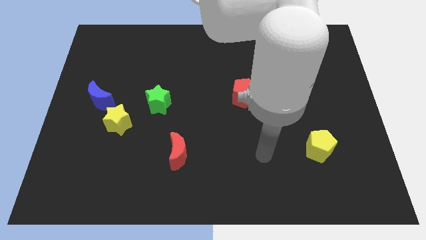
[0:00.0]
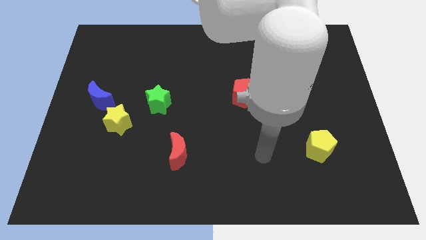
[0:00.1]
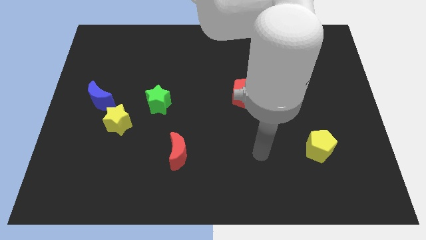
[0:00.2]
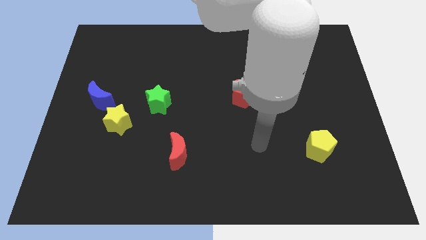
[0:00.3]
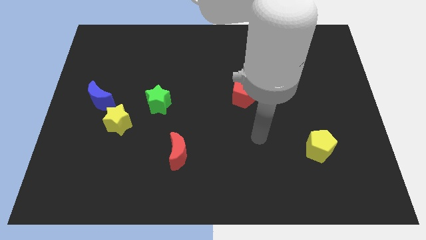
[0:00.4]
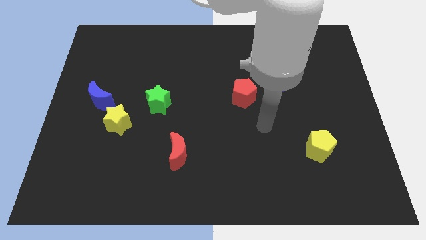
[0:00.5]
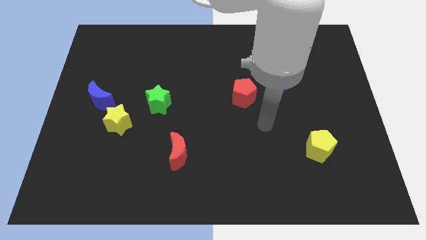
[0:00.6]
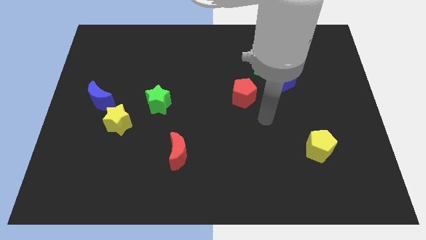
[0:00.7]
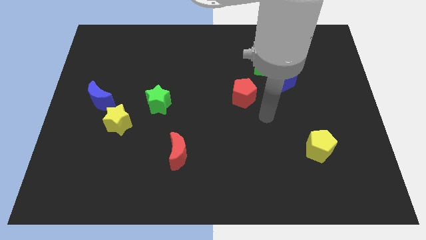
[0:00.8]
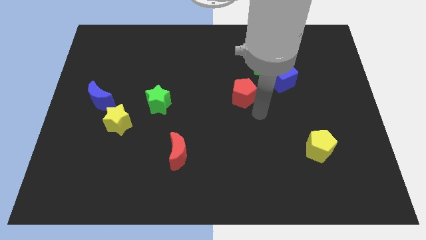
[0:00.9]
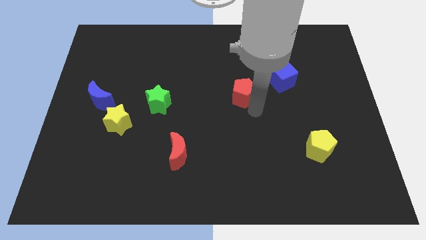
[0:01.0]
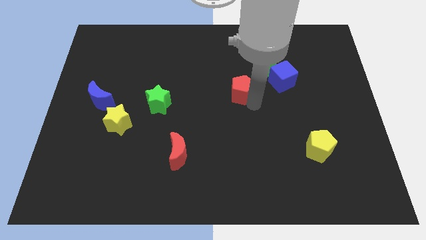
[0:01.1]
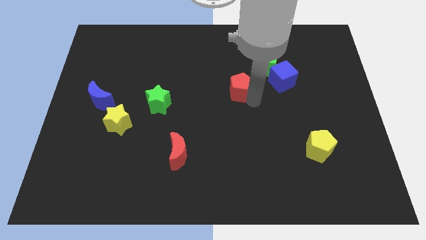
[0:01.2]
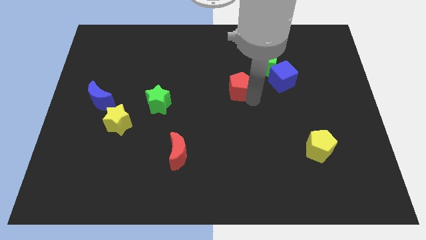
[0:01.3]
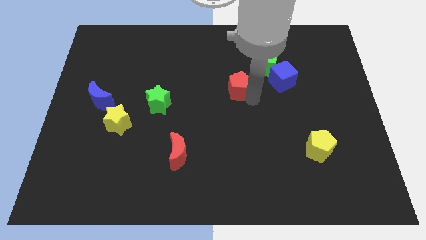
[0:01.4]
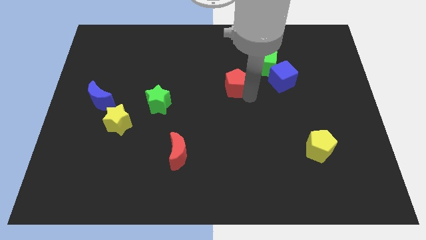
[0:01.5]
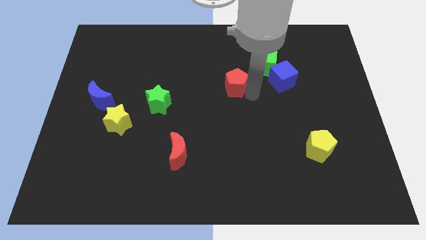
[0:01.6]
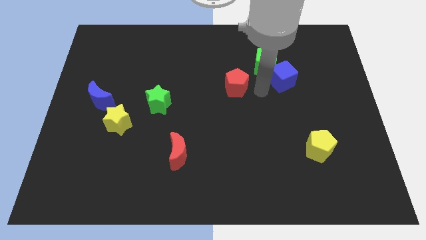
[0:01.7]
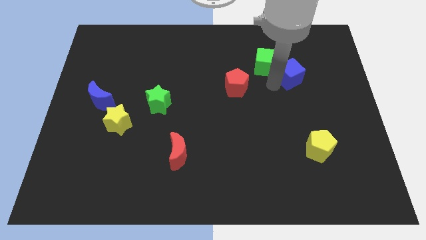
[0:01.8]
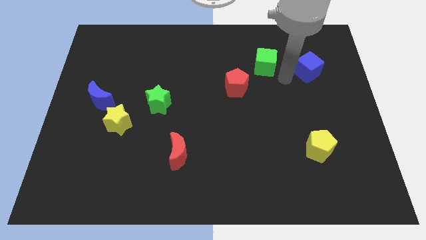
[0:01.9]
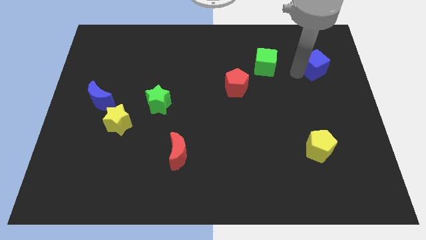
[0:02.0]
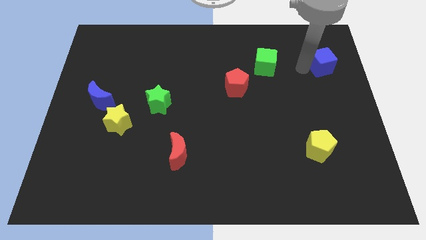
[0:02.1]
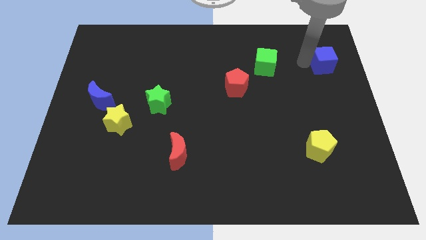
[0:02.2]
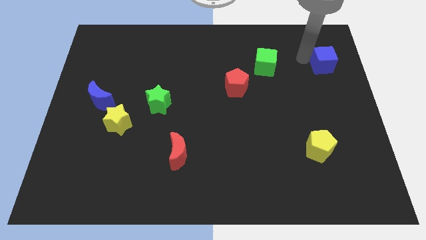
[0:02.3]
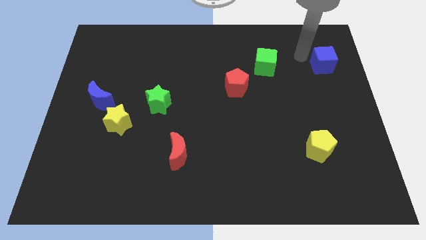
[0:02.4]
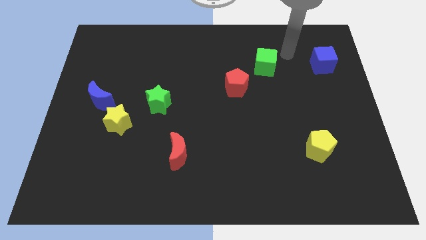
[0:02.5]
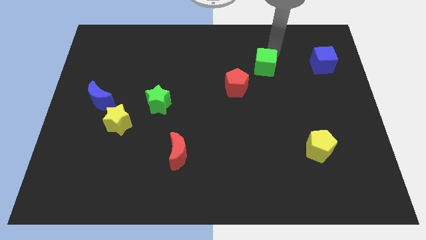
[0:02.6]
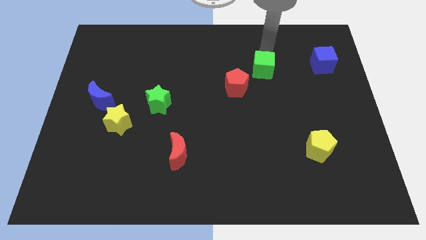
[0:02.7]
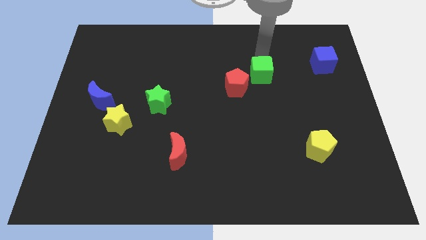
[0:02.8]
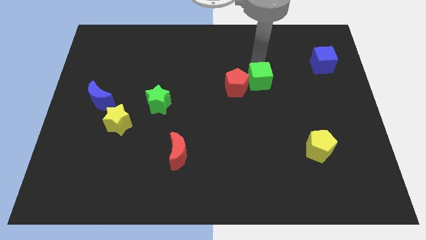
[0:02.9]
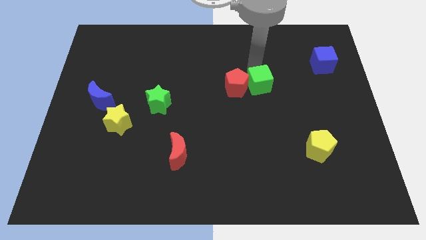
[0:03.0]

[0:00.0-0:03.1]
move red pentagon and the blue cube away from the green cube

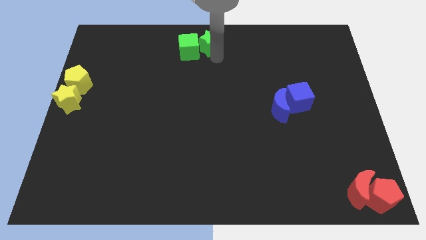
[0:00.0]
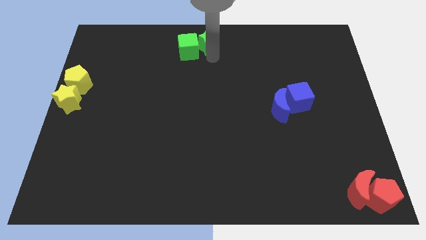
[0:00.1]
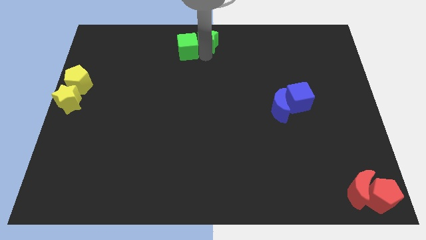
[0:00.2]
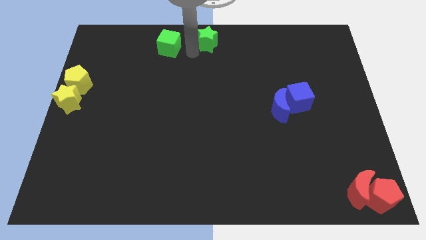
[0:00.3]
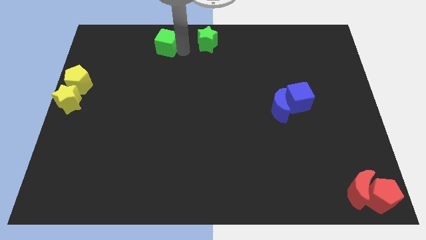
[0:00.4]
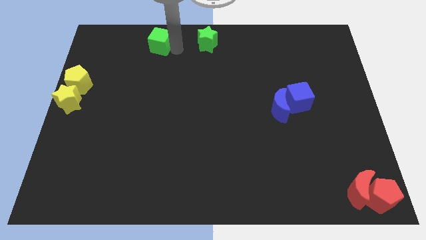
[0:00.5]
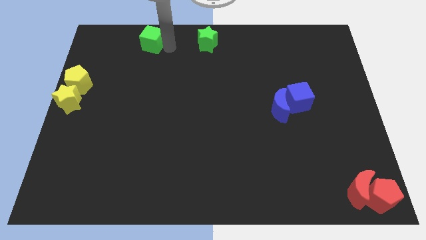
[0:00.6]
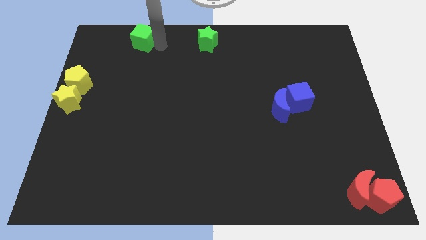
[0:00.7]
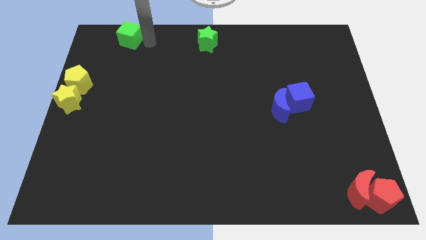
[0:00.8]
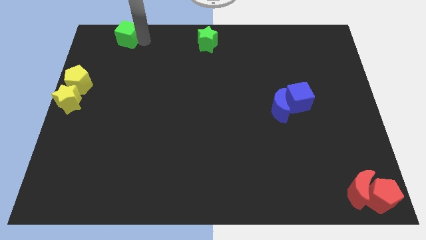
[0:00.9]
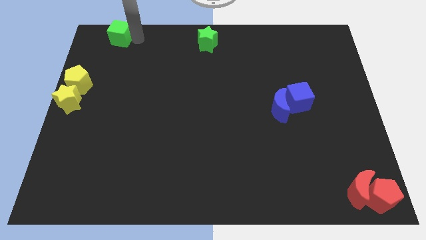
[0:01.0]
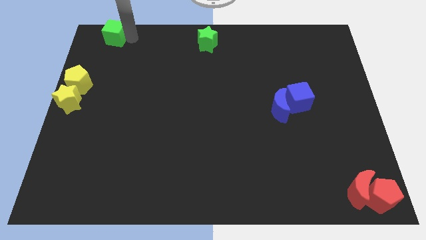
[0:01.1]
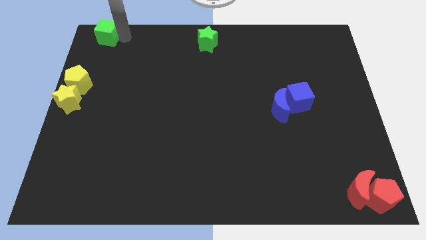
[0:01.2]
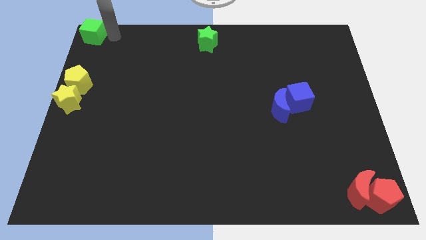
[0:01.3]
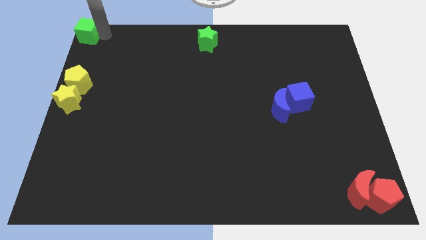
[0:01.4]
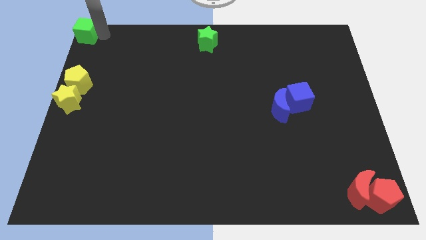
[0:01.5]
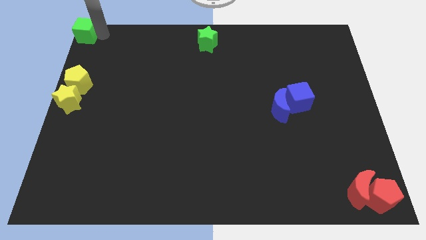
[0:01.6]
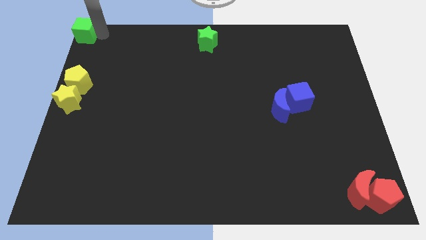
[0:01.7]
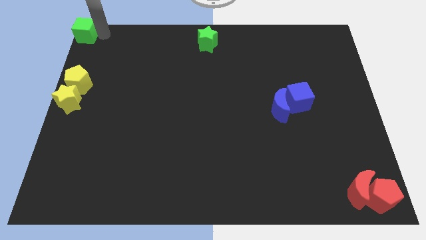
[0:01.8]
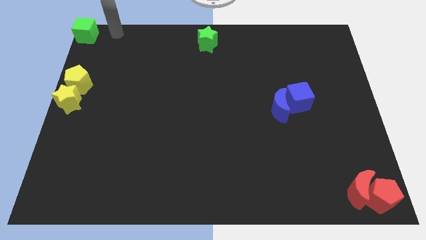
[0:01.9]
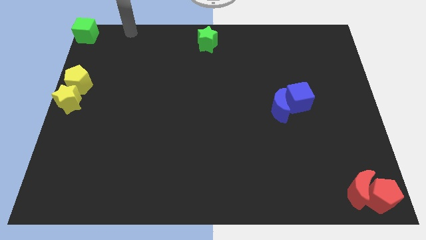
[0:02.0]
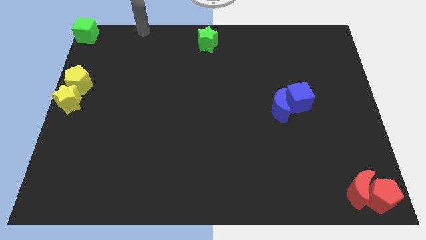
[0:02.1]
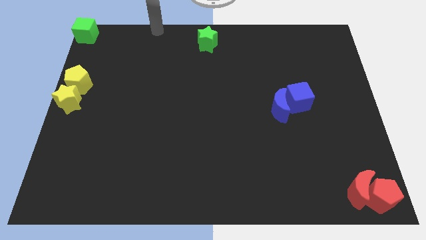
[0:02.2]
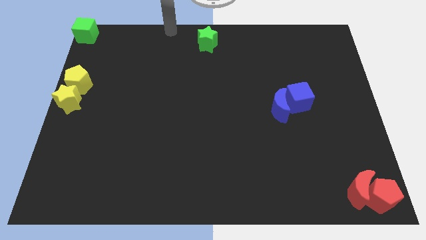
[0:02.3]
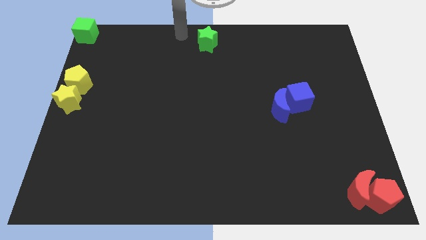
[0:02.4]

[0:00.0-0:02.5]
put the green cube at the top left corner of the board

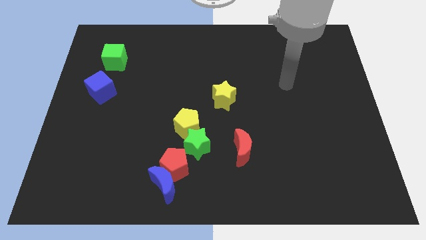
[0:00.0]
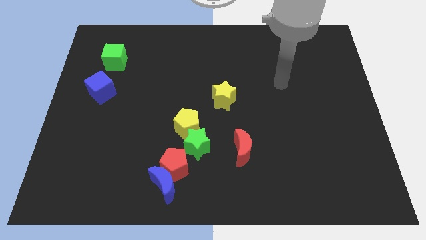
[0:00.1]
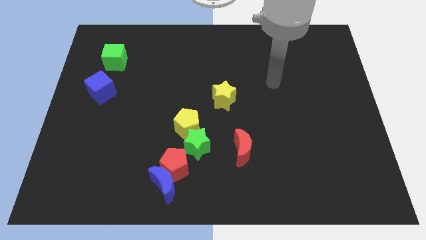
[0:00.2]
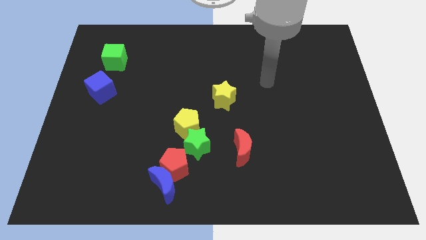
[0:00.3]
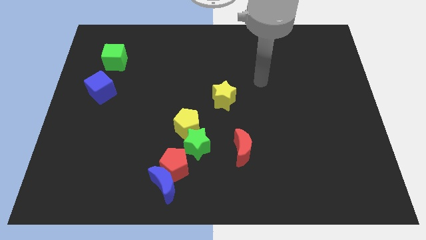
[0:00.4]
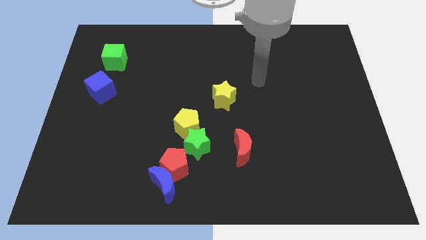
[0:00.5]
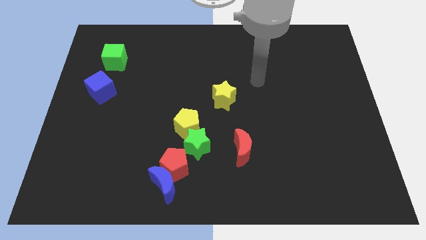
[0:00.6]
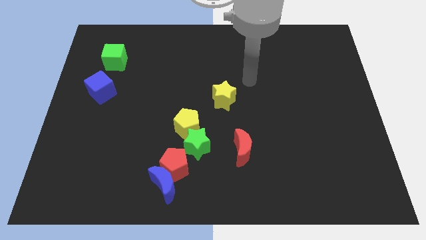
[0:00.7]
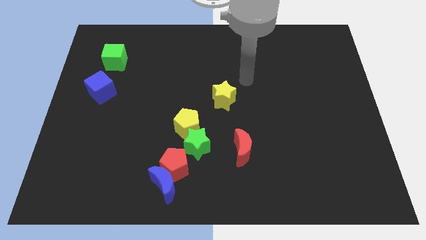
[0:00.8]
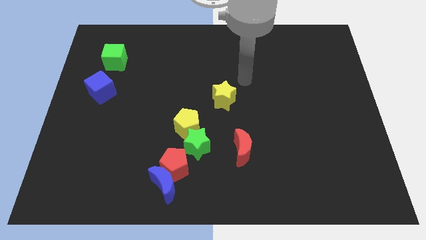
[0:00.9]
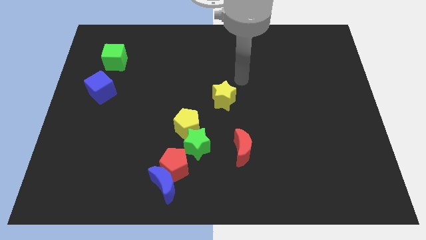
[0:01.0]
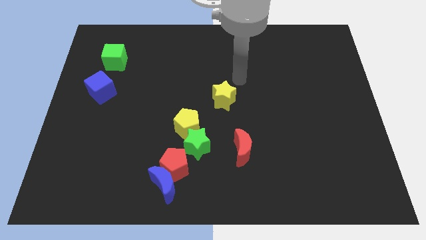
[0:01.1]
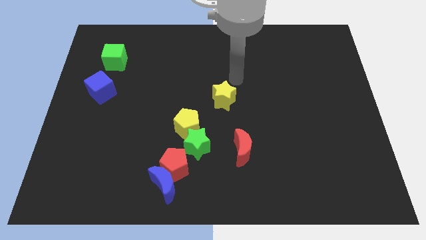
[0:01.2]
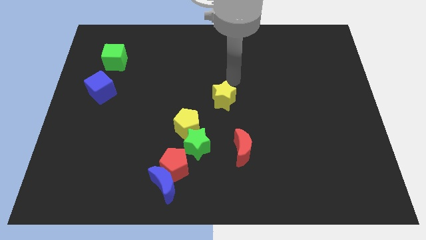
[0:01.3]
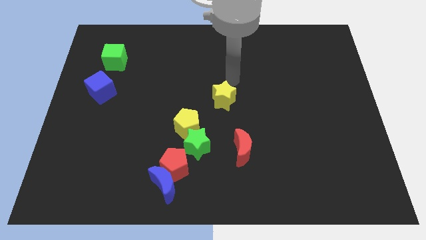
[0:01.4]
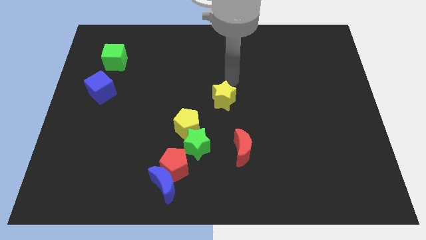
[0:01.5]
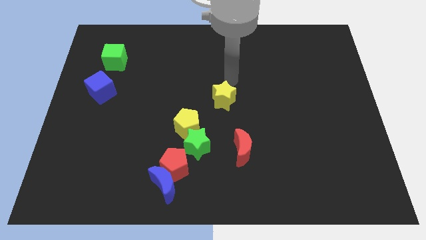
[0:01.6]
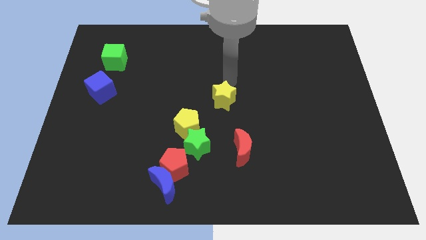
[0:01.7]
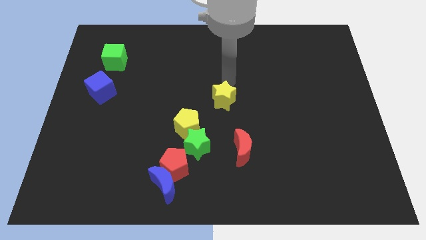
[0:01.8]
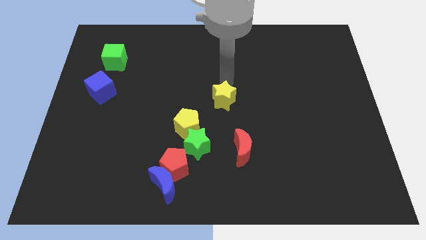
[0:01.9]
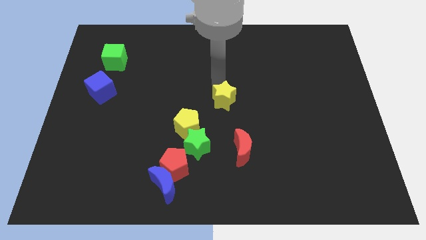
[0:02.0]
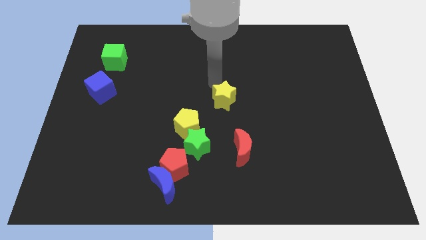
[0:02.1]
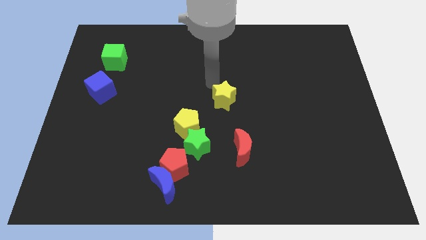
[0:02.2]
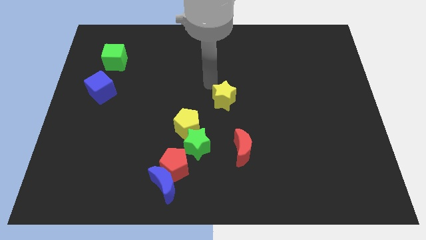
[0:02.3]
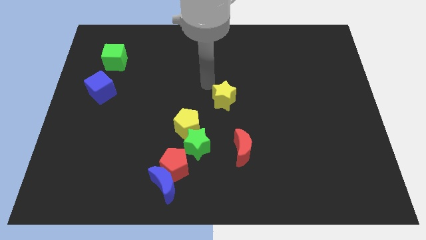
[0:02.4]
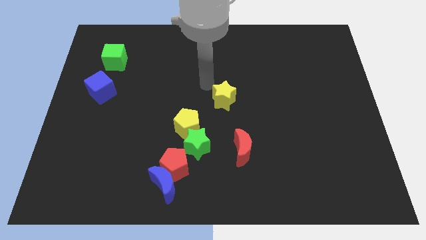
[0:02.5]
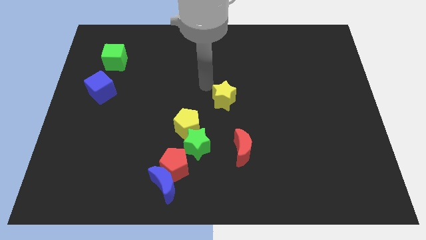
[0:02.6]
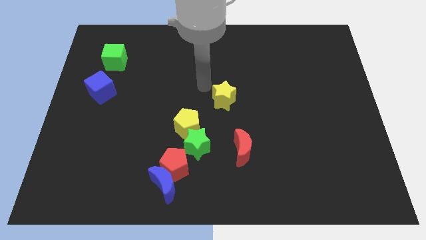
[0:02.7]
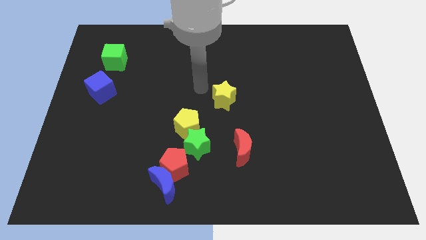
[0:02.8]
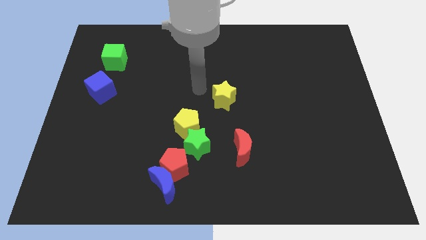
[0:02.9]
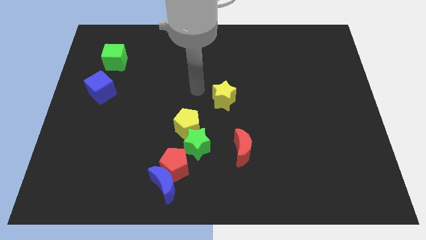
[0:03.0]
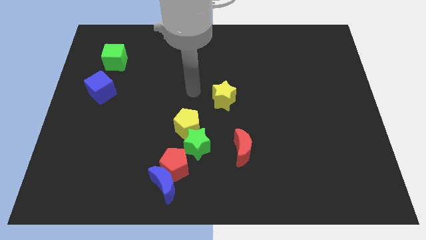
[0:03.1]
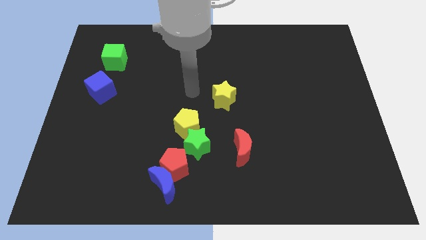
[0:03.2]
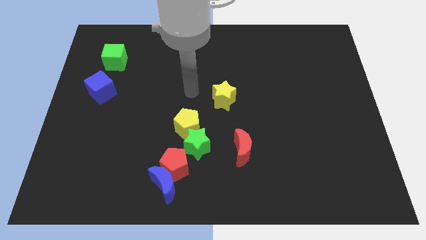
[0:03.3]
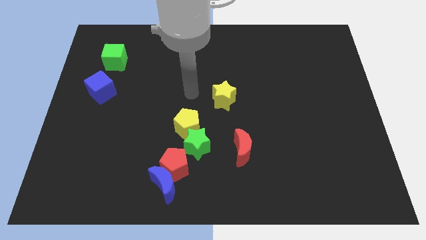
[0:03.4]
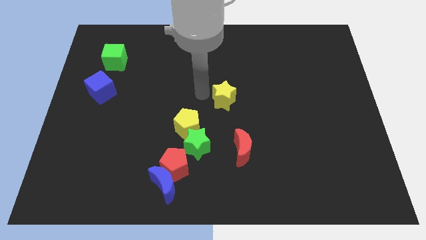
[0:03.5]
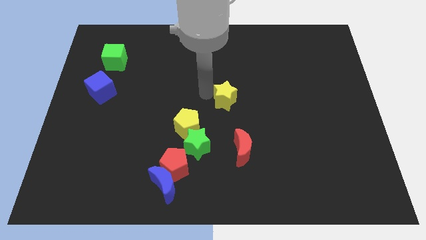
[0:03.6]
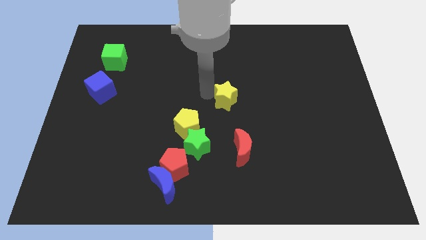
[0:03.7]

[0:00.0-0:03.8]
place your arm to the left of yellow star
